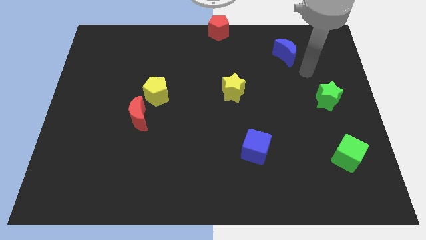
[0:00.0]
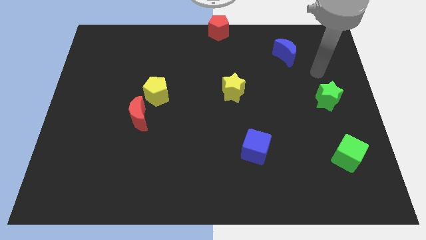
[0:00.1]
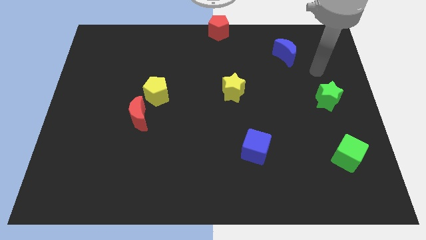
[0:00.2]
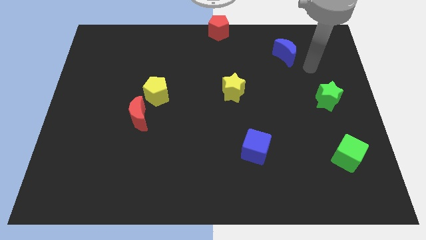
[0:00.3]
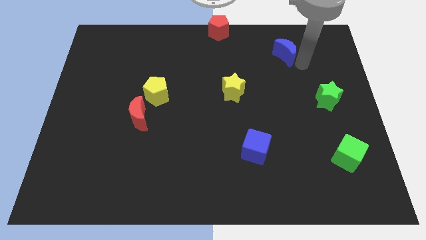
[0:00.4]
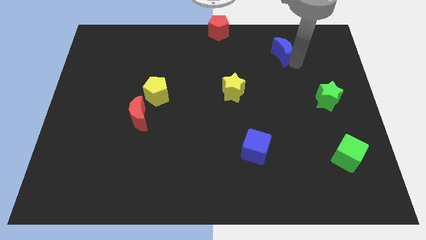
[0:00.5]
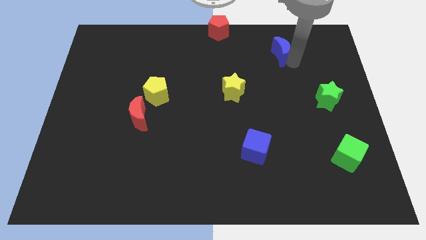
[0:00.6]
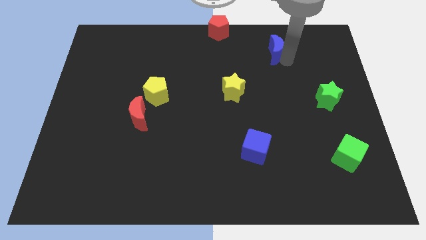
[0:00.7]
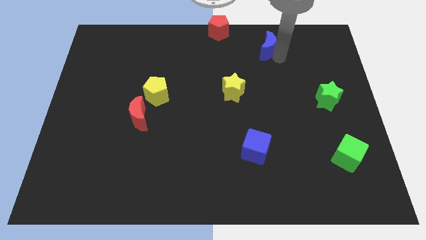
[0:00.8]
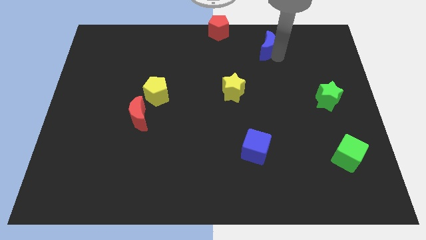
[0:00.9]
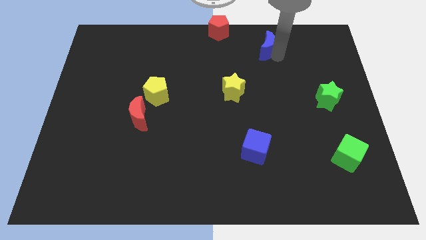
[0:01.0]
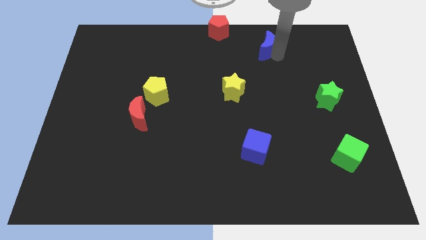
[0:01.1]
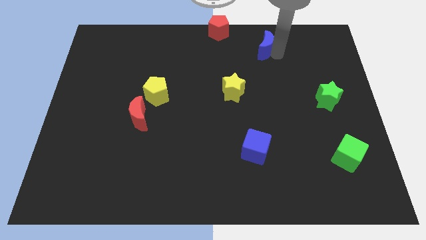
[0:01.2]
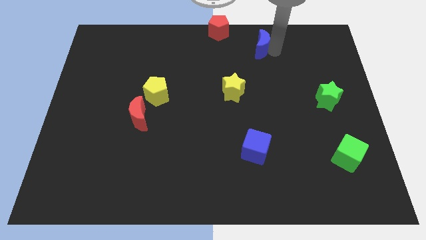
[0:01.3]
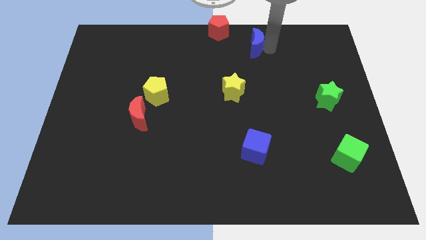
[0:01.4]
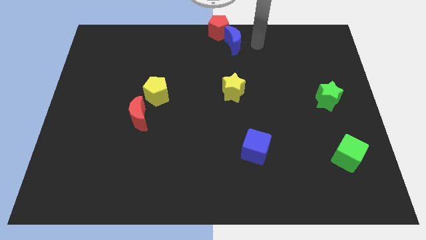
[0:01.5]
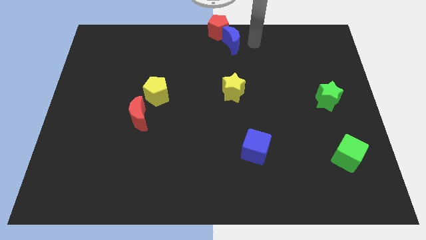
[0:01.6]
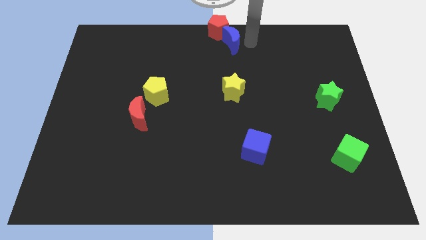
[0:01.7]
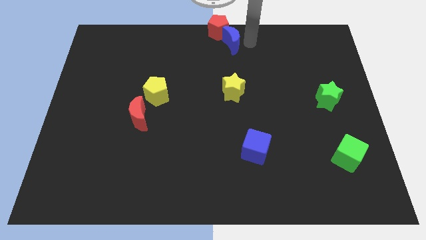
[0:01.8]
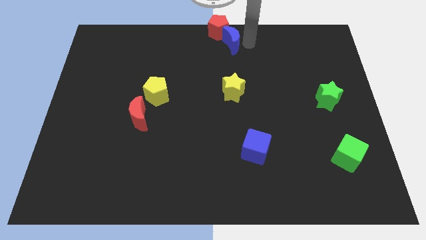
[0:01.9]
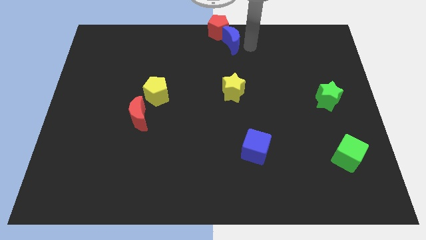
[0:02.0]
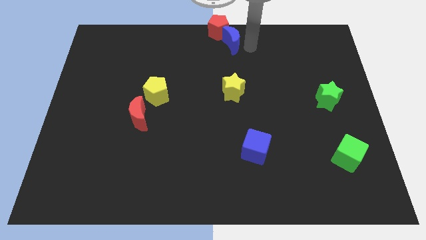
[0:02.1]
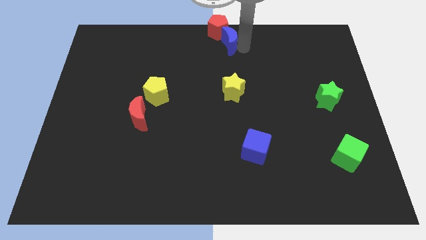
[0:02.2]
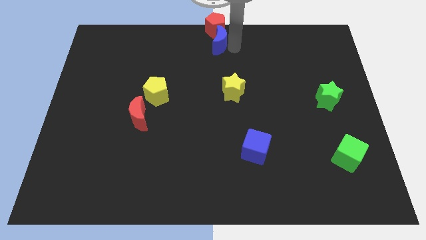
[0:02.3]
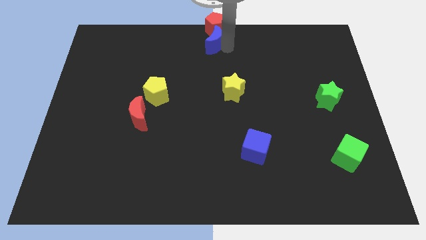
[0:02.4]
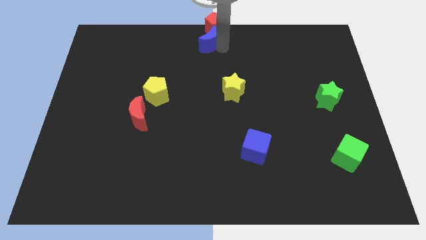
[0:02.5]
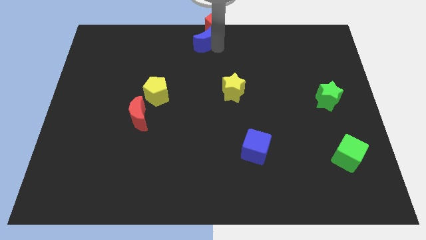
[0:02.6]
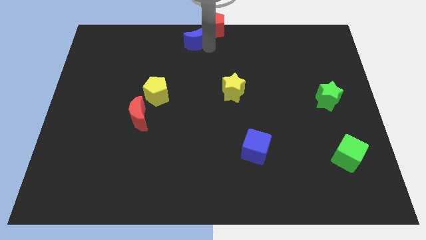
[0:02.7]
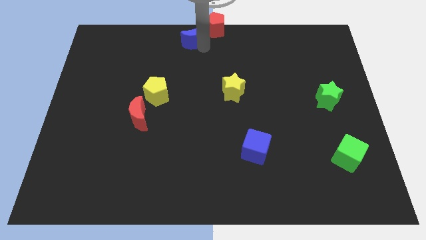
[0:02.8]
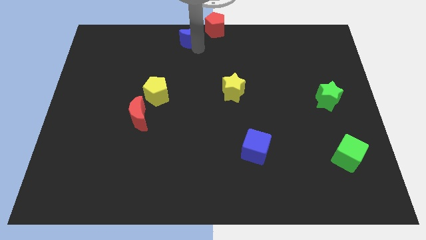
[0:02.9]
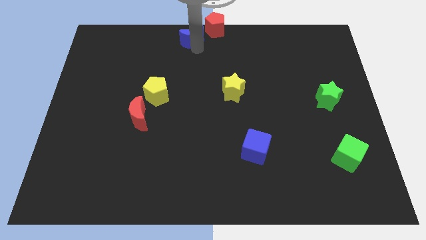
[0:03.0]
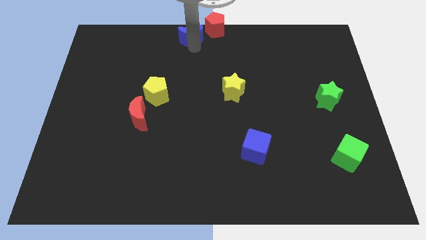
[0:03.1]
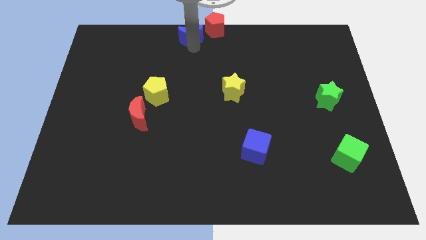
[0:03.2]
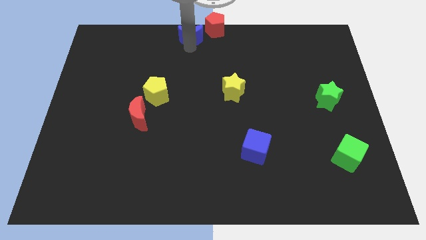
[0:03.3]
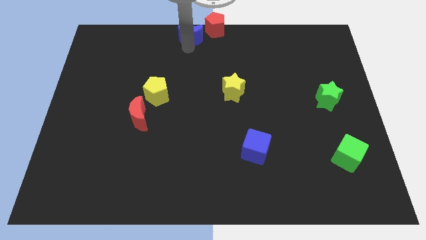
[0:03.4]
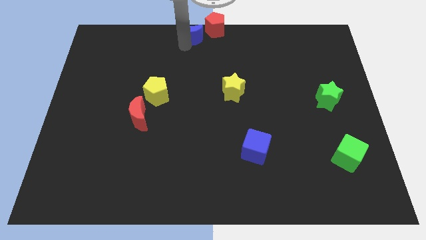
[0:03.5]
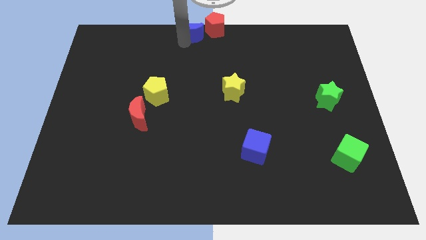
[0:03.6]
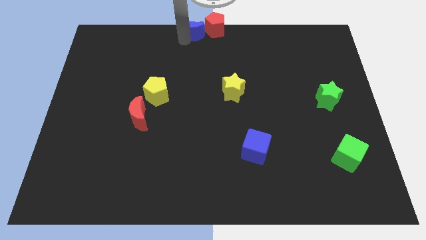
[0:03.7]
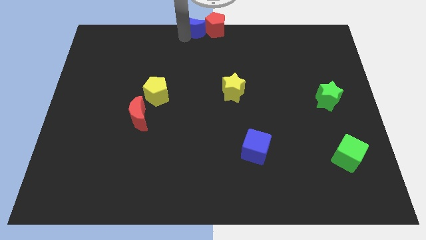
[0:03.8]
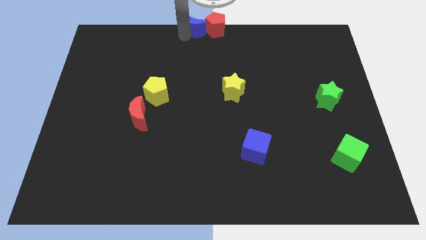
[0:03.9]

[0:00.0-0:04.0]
push the blue moon to the left of red pentagon

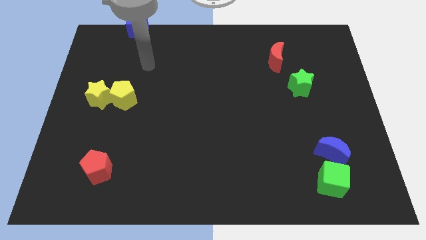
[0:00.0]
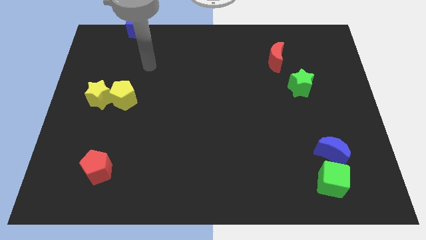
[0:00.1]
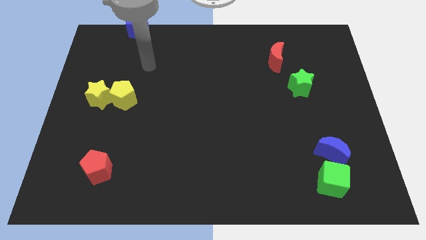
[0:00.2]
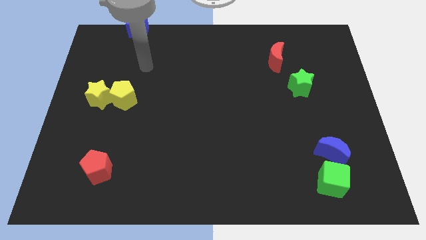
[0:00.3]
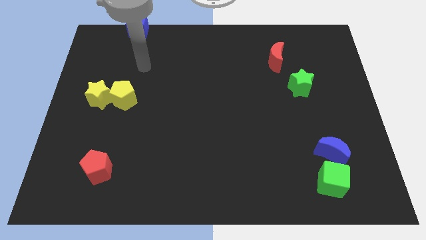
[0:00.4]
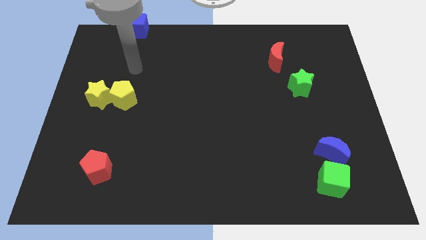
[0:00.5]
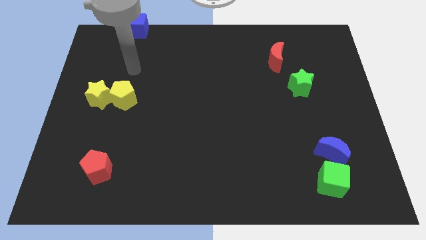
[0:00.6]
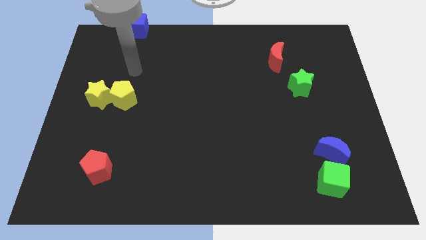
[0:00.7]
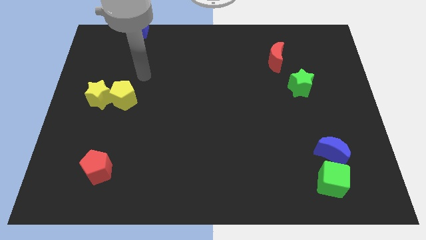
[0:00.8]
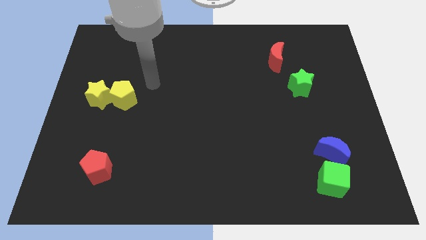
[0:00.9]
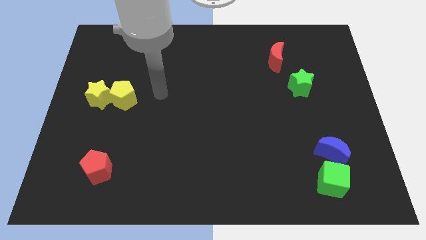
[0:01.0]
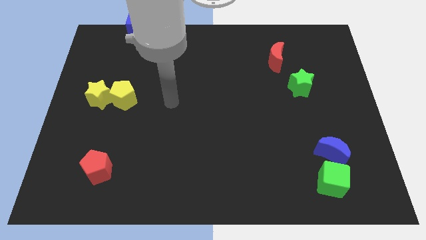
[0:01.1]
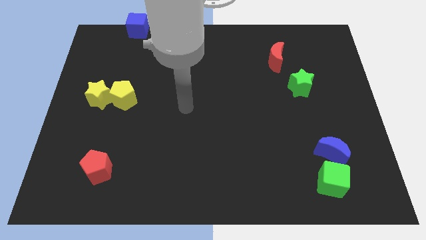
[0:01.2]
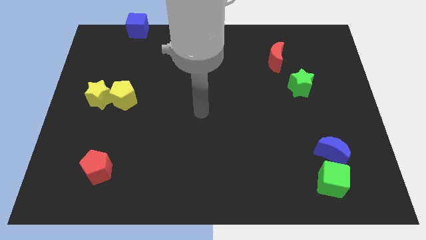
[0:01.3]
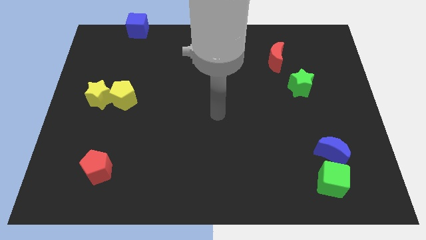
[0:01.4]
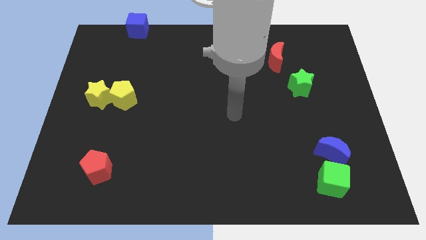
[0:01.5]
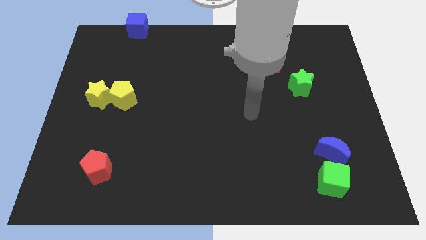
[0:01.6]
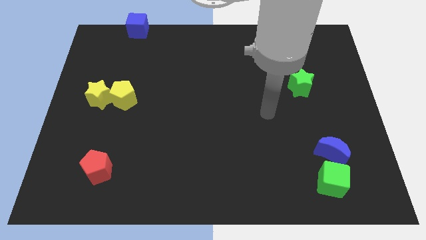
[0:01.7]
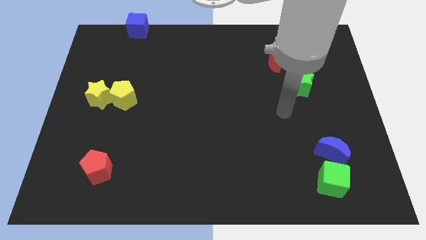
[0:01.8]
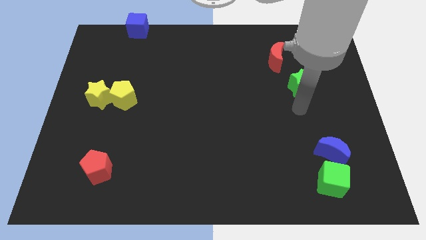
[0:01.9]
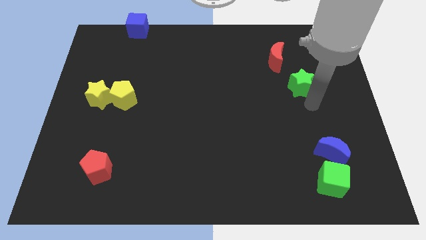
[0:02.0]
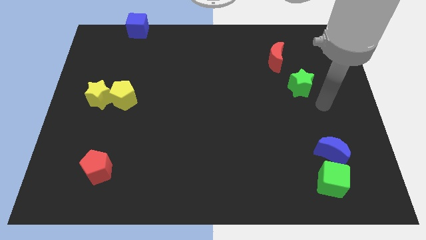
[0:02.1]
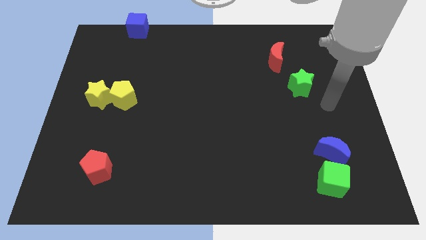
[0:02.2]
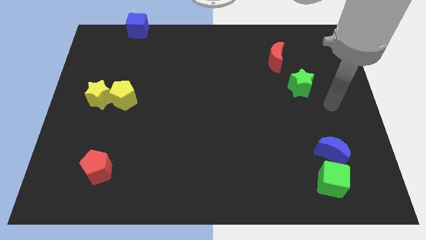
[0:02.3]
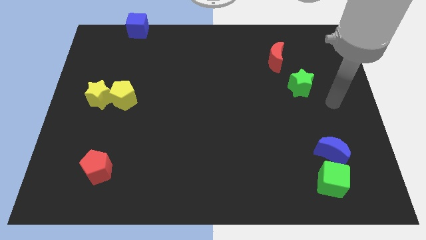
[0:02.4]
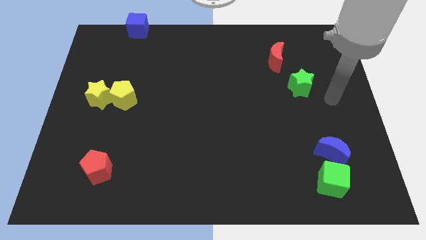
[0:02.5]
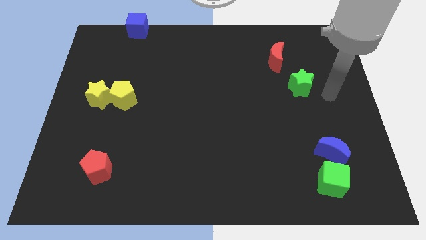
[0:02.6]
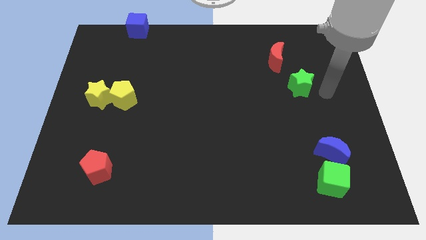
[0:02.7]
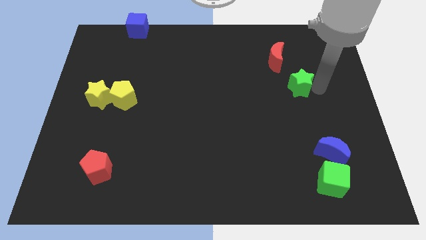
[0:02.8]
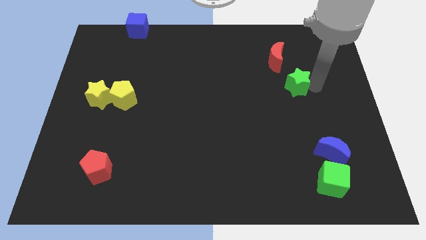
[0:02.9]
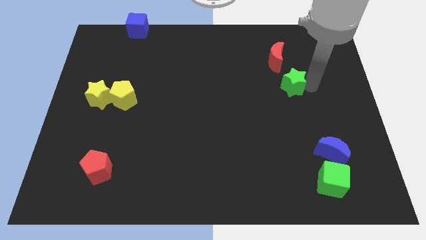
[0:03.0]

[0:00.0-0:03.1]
move the arm towards the green star

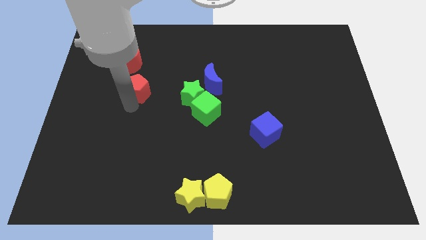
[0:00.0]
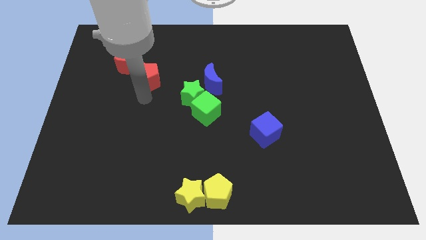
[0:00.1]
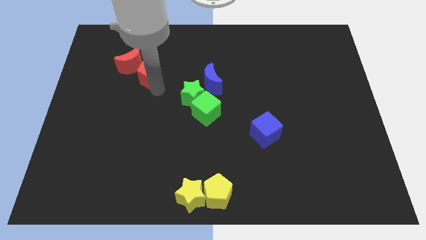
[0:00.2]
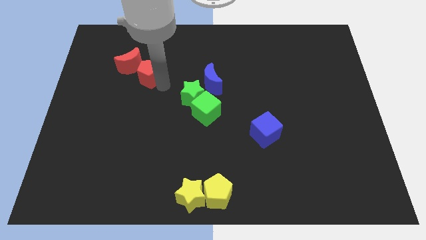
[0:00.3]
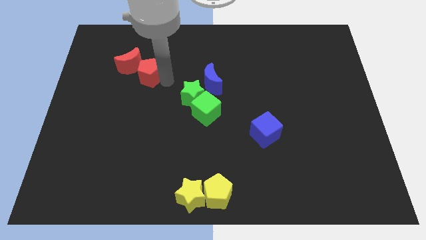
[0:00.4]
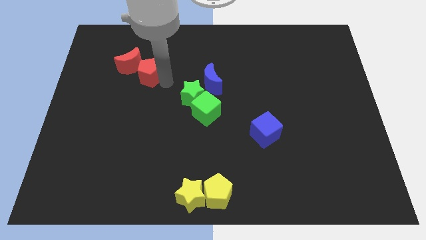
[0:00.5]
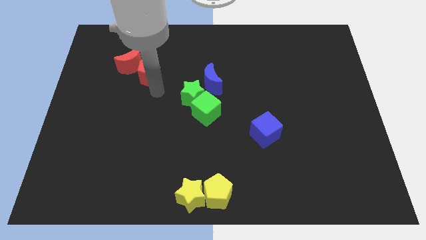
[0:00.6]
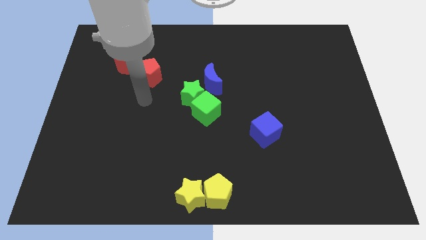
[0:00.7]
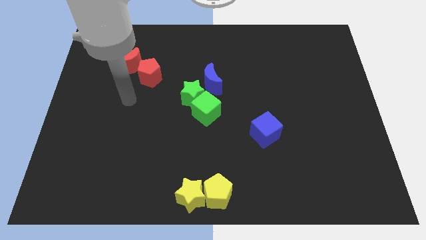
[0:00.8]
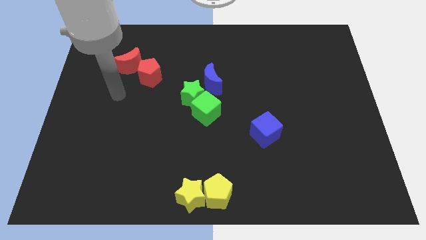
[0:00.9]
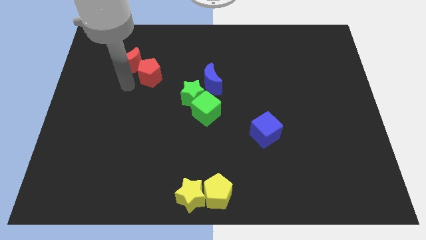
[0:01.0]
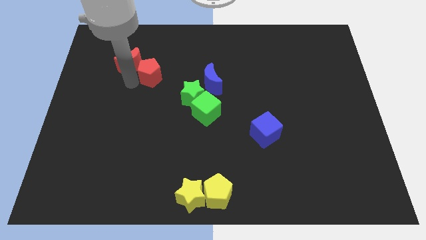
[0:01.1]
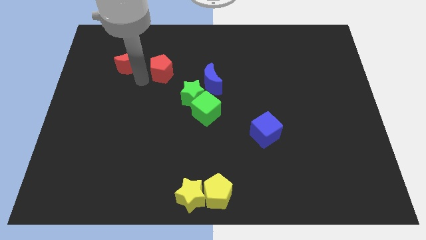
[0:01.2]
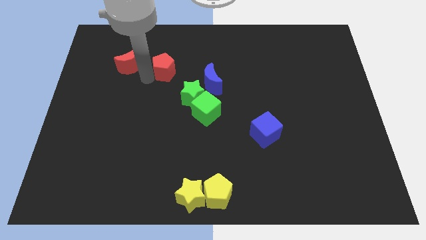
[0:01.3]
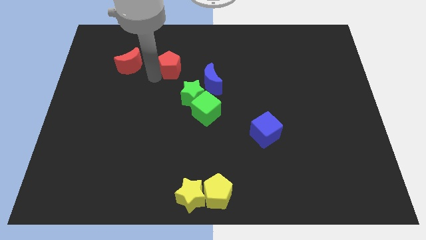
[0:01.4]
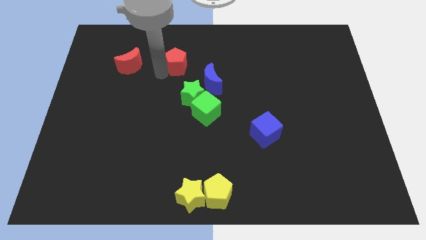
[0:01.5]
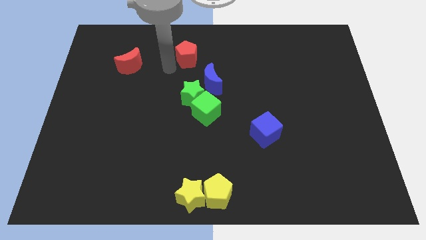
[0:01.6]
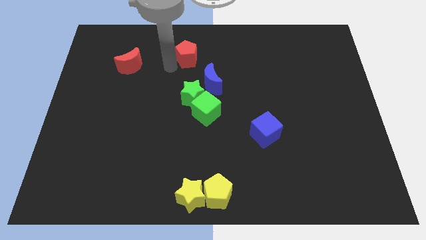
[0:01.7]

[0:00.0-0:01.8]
move red pentagon diagonally upwards
